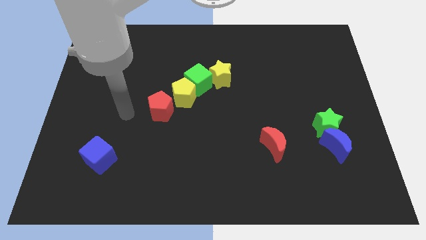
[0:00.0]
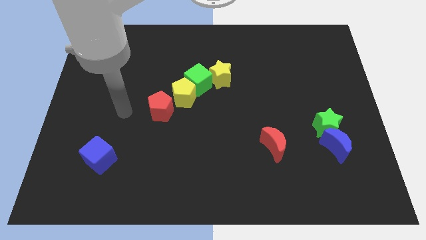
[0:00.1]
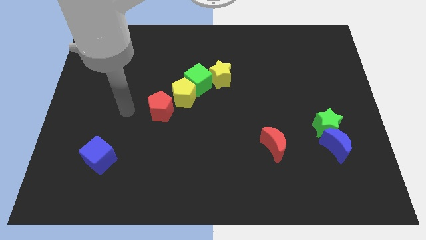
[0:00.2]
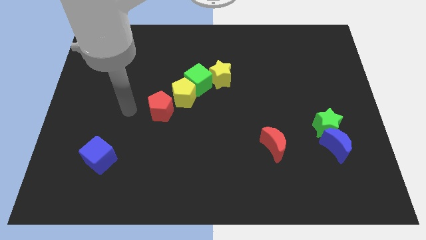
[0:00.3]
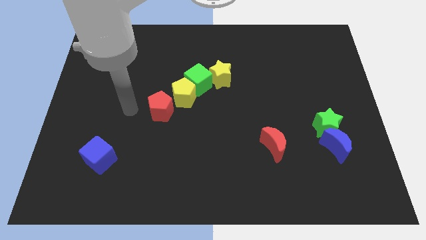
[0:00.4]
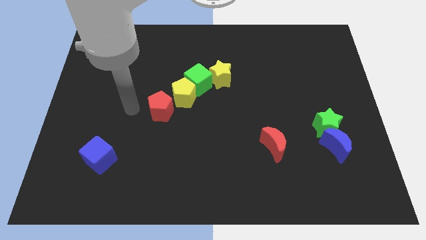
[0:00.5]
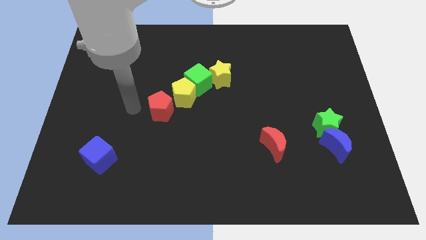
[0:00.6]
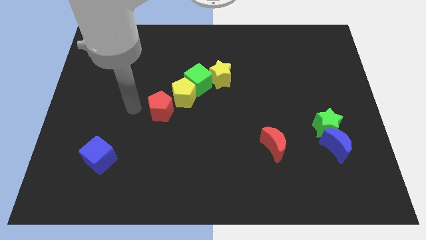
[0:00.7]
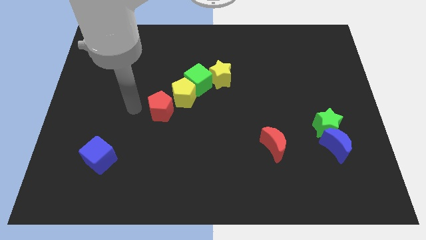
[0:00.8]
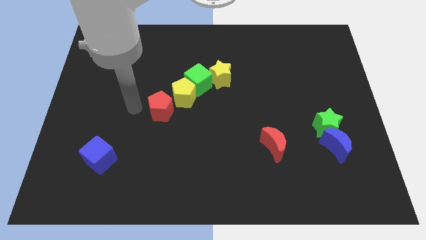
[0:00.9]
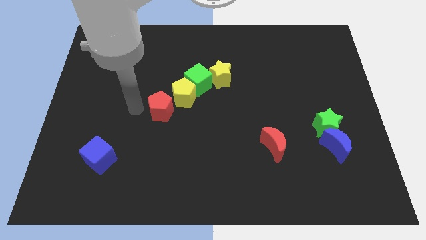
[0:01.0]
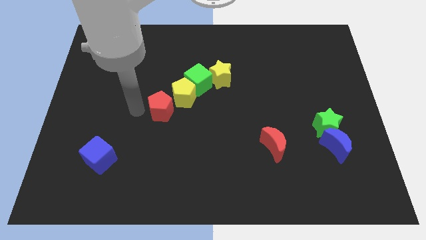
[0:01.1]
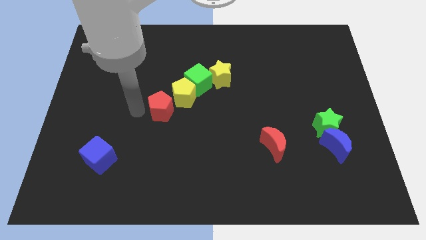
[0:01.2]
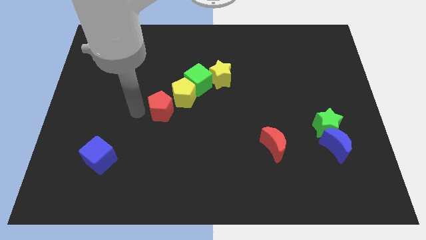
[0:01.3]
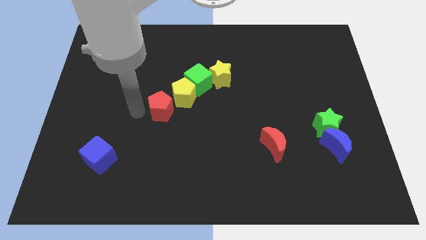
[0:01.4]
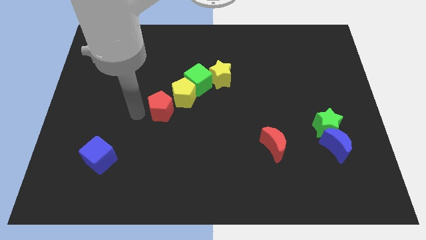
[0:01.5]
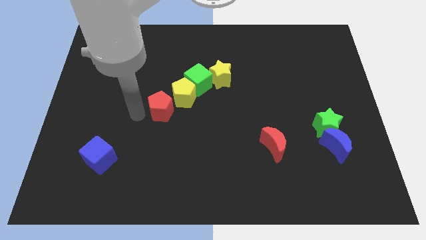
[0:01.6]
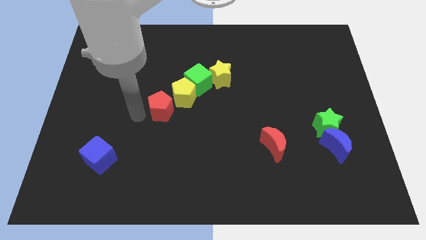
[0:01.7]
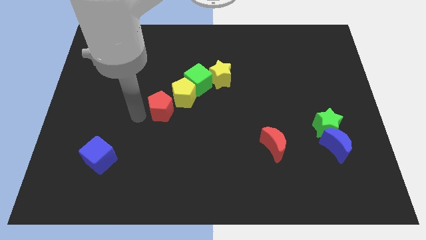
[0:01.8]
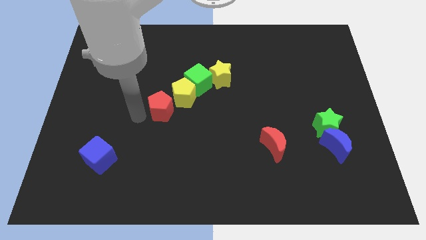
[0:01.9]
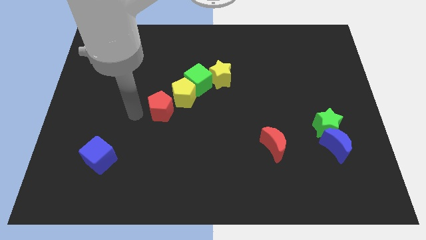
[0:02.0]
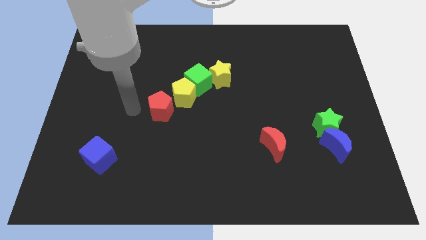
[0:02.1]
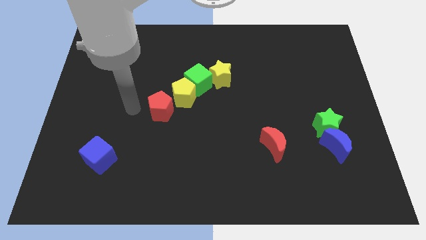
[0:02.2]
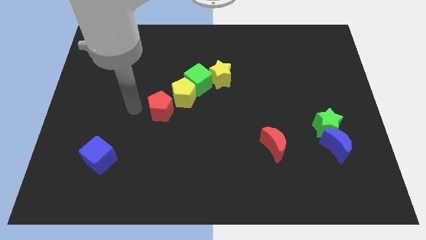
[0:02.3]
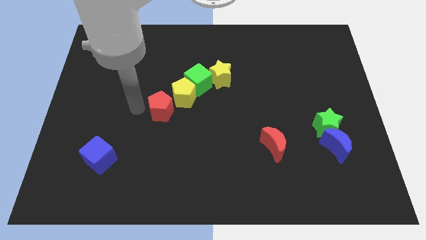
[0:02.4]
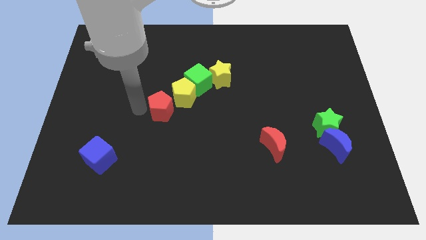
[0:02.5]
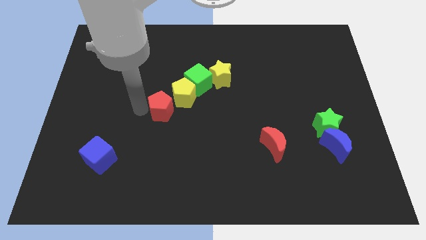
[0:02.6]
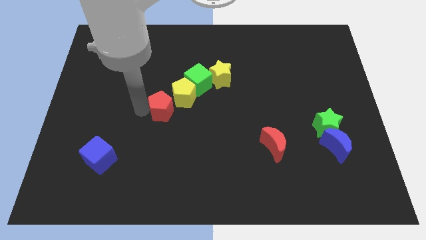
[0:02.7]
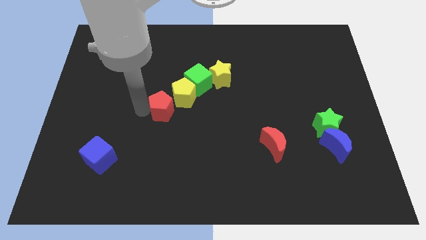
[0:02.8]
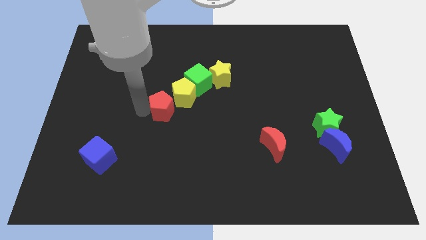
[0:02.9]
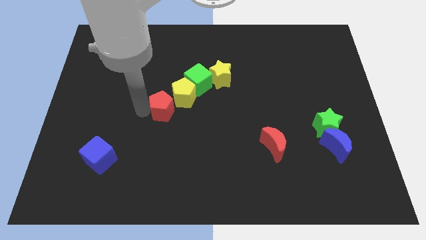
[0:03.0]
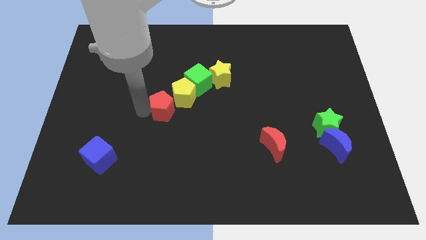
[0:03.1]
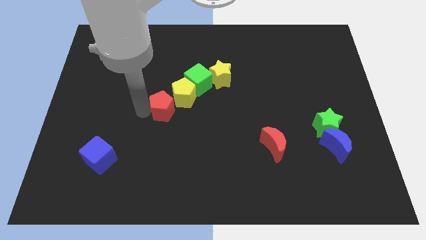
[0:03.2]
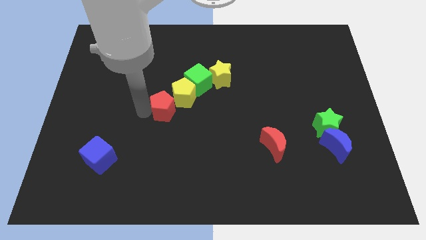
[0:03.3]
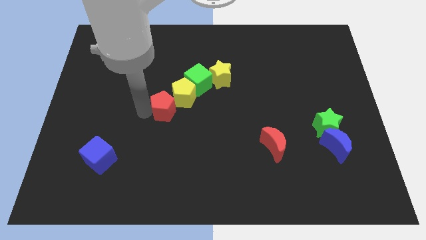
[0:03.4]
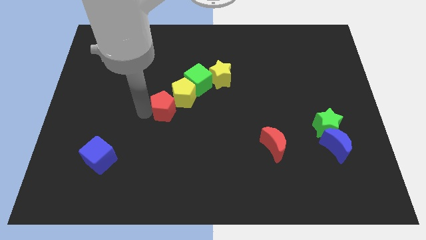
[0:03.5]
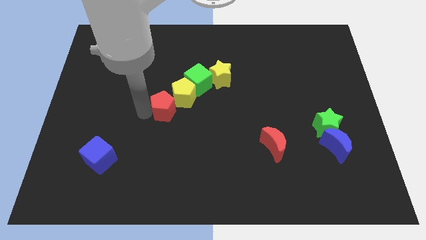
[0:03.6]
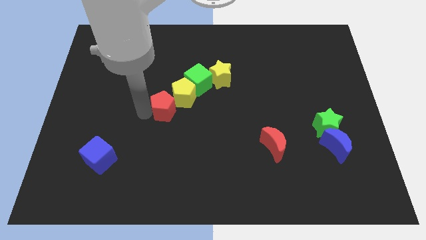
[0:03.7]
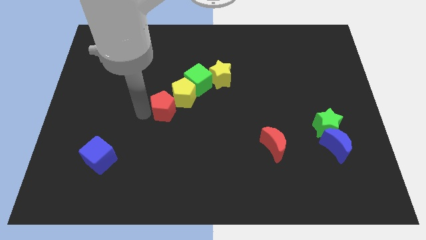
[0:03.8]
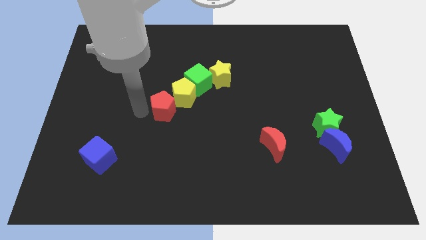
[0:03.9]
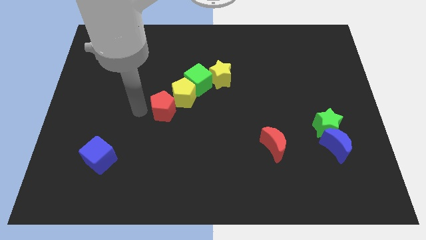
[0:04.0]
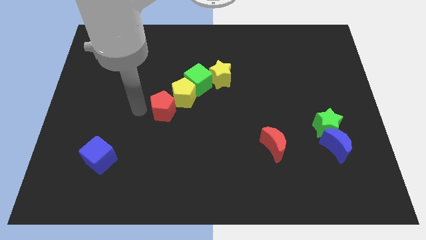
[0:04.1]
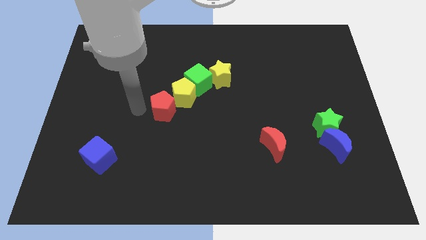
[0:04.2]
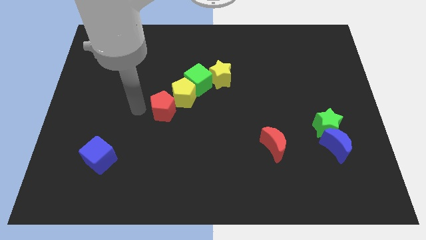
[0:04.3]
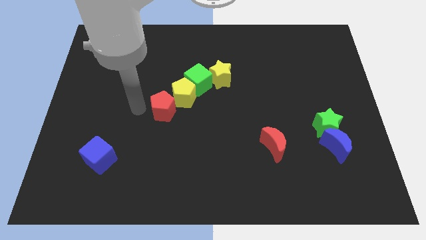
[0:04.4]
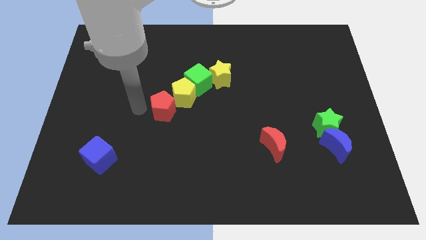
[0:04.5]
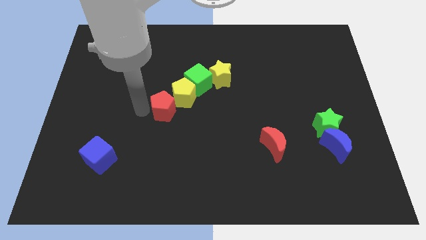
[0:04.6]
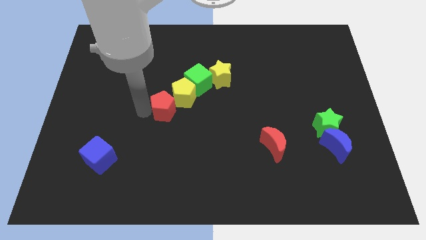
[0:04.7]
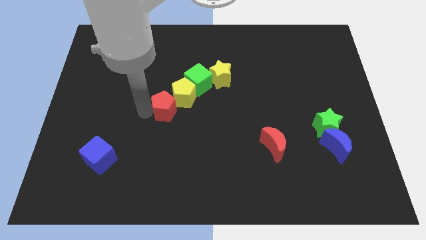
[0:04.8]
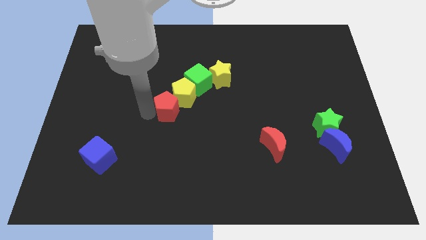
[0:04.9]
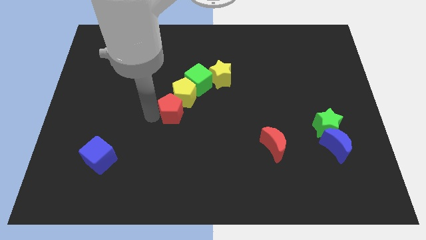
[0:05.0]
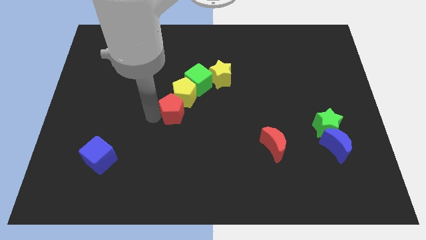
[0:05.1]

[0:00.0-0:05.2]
push the red pentagon into the yellow pentagon

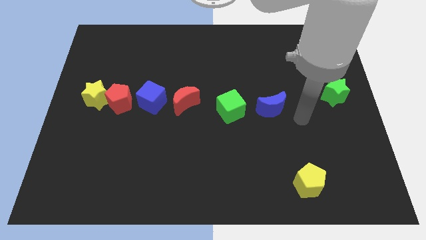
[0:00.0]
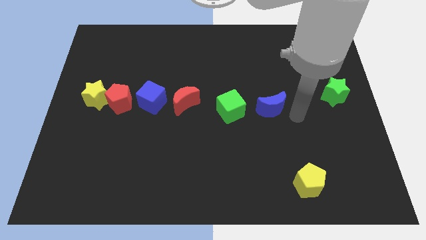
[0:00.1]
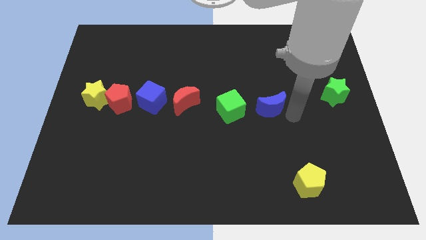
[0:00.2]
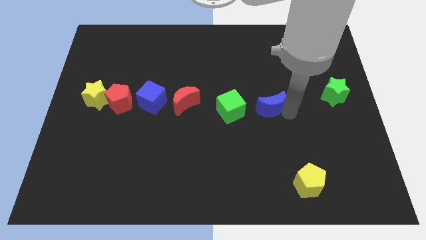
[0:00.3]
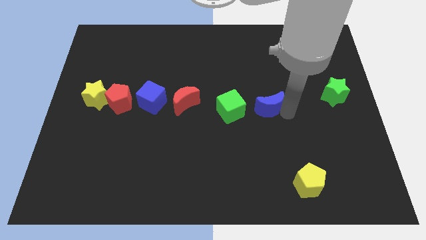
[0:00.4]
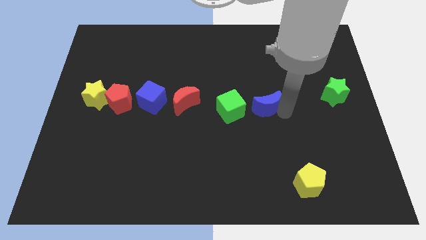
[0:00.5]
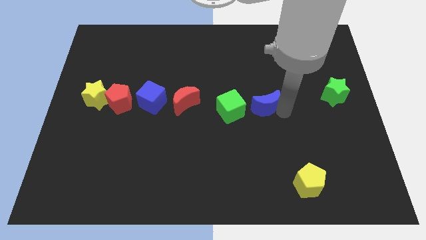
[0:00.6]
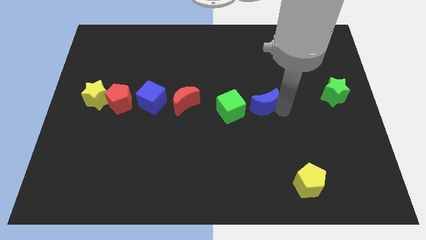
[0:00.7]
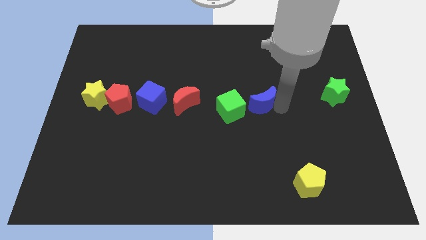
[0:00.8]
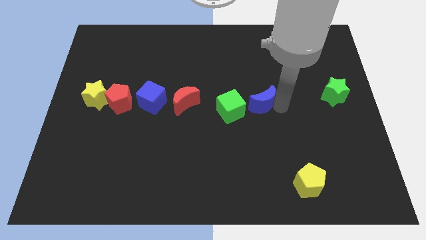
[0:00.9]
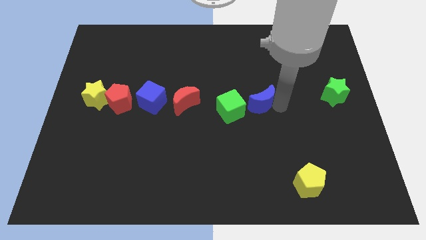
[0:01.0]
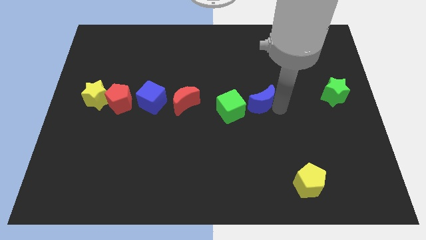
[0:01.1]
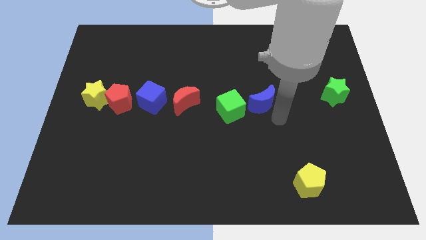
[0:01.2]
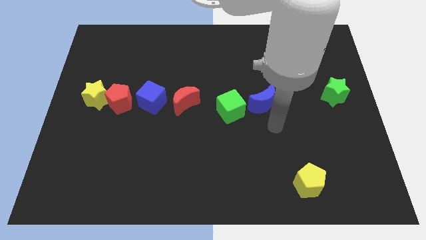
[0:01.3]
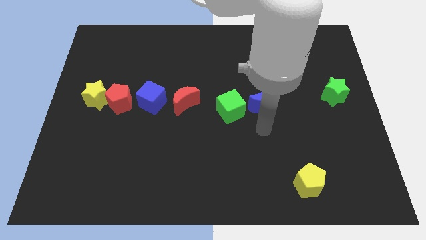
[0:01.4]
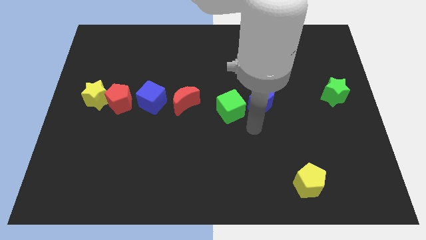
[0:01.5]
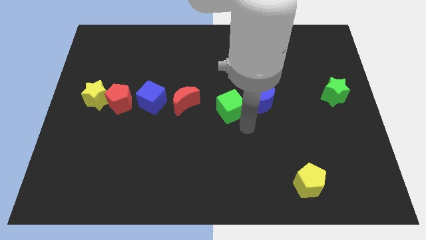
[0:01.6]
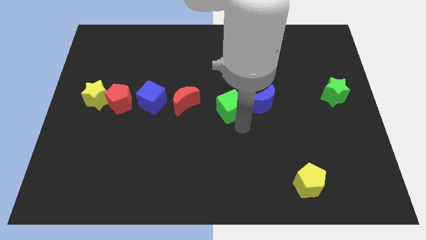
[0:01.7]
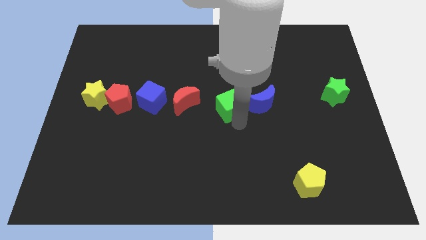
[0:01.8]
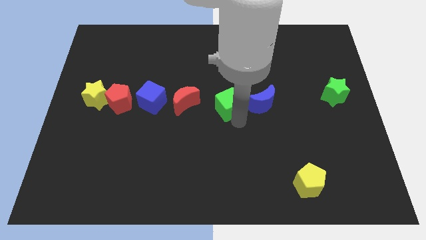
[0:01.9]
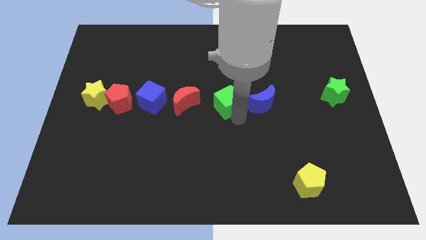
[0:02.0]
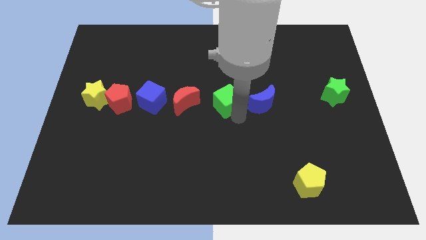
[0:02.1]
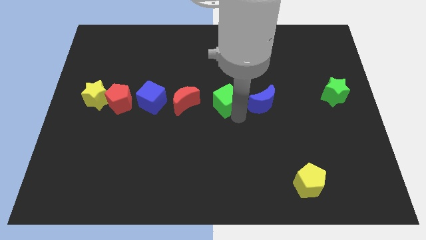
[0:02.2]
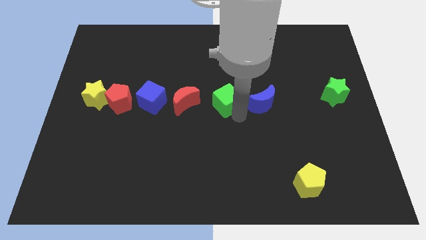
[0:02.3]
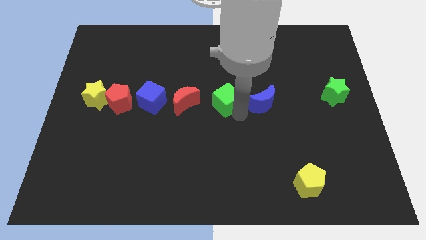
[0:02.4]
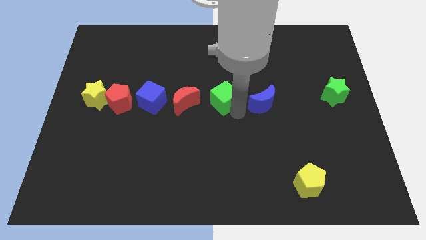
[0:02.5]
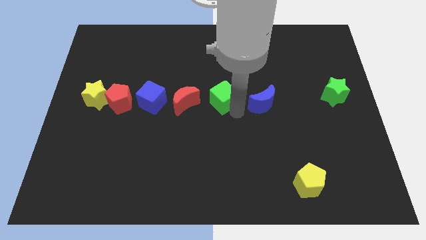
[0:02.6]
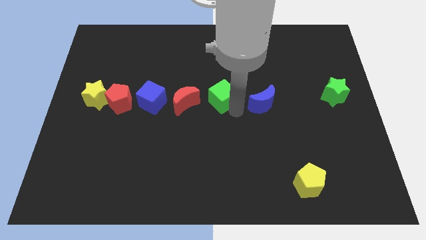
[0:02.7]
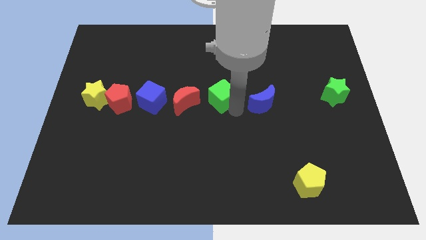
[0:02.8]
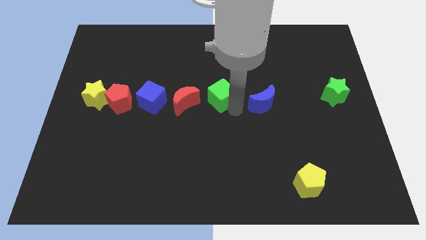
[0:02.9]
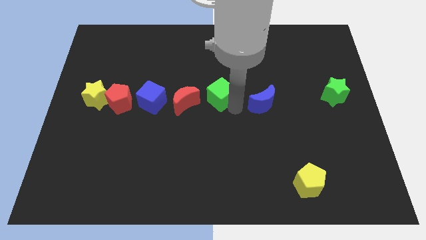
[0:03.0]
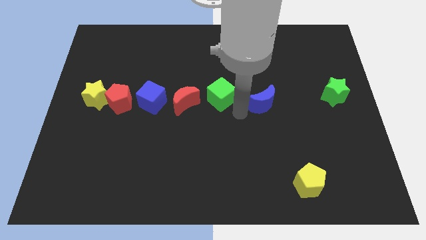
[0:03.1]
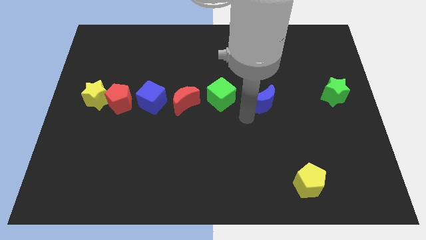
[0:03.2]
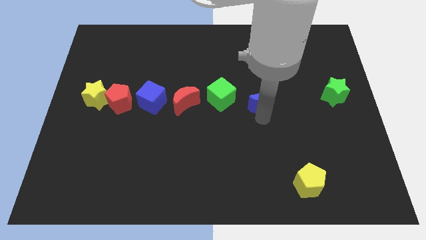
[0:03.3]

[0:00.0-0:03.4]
touch the green cube and blue moon

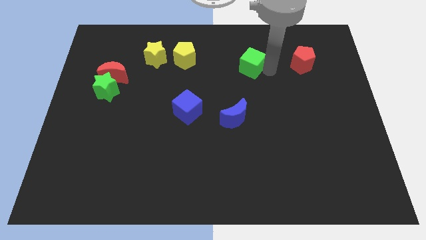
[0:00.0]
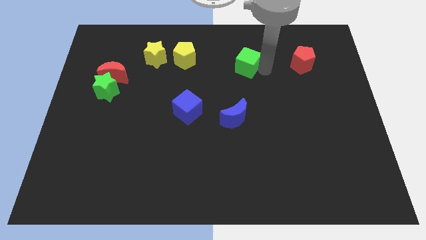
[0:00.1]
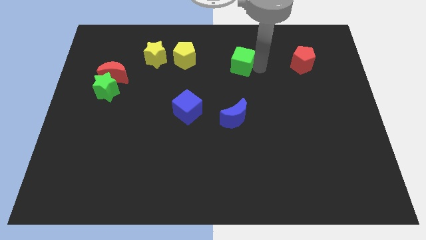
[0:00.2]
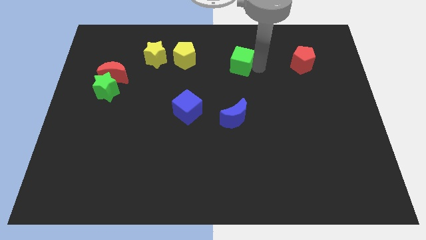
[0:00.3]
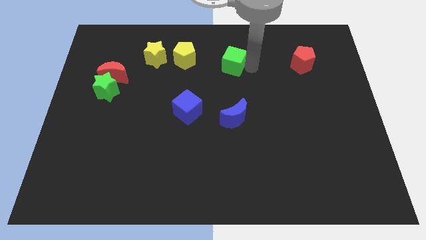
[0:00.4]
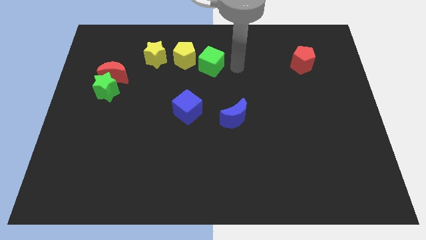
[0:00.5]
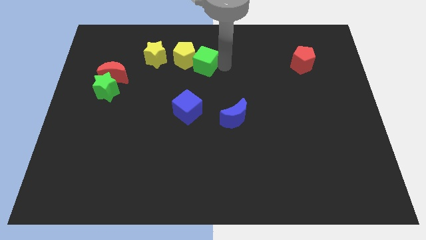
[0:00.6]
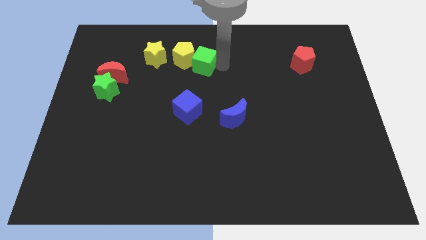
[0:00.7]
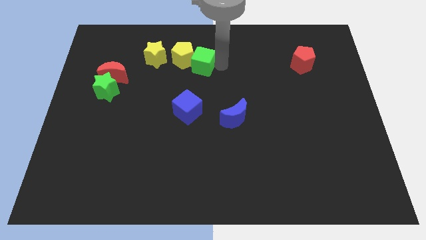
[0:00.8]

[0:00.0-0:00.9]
push green cube in to yellow pentagon
